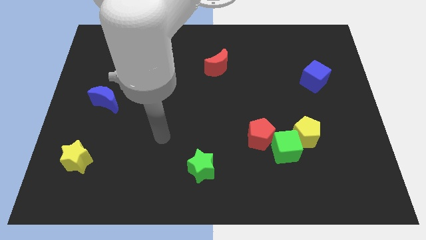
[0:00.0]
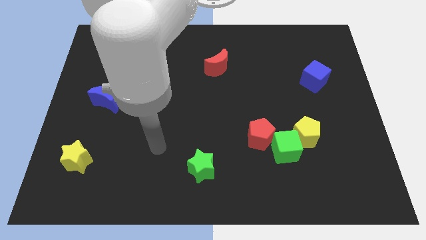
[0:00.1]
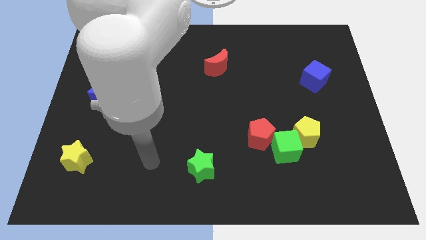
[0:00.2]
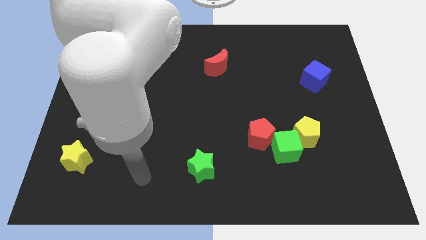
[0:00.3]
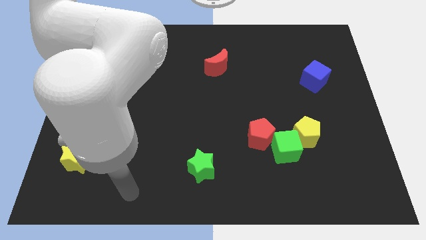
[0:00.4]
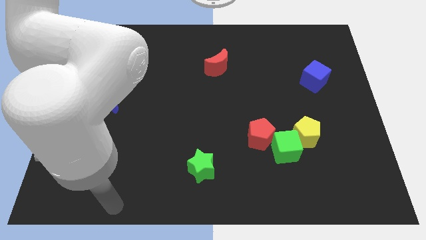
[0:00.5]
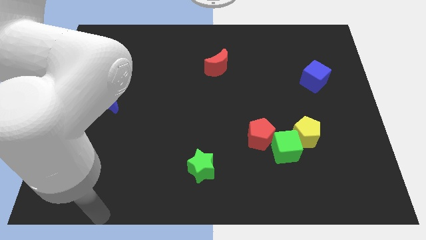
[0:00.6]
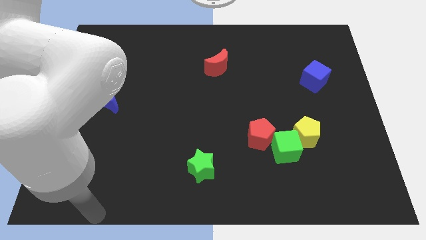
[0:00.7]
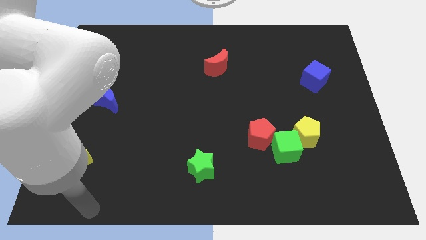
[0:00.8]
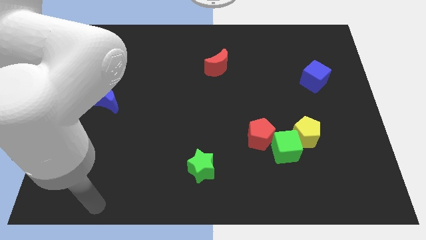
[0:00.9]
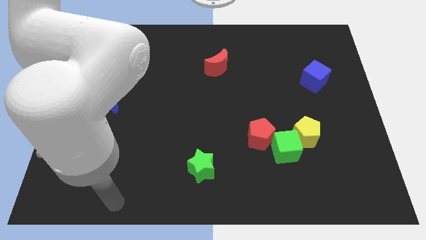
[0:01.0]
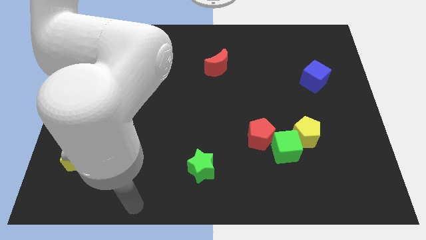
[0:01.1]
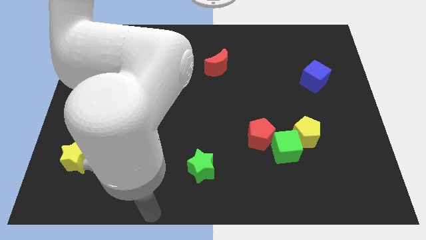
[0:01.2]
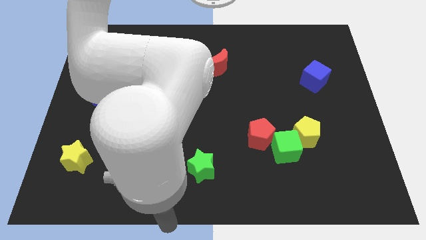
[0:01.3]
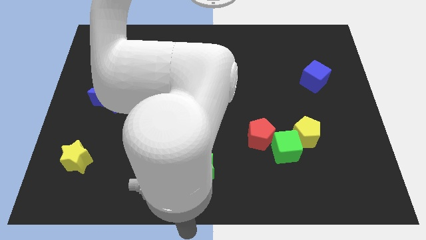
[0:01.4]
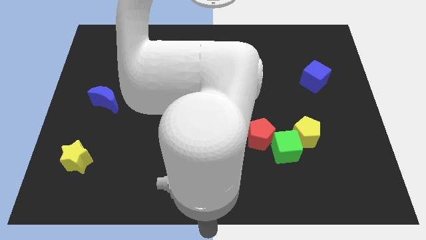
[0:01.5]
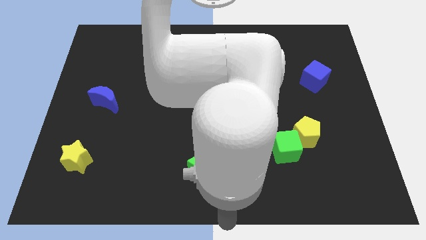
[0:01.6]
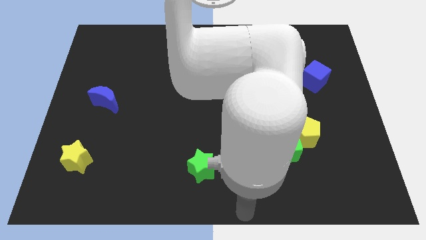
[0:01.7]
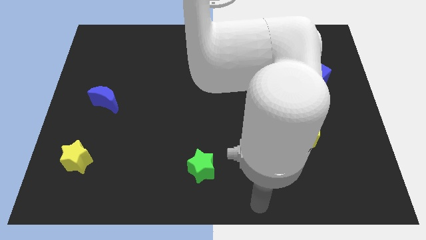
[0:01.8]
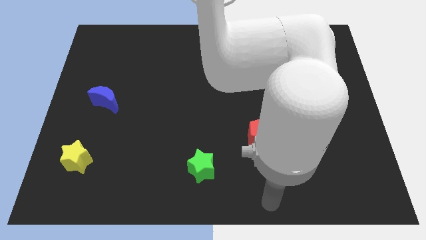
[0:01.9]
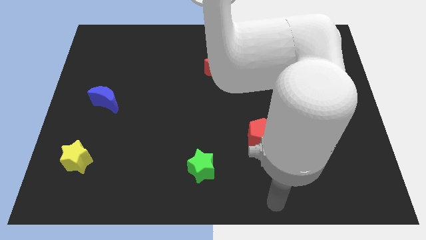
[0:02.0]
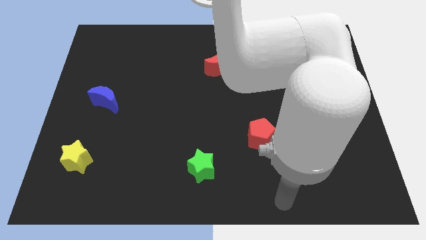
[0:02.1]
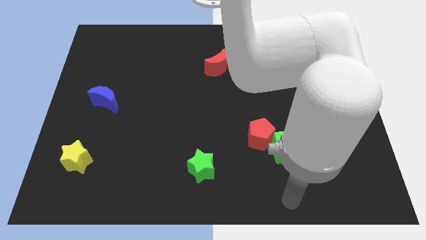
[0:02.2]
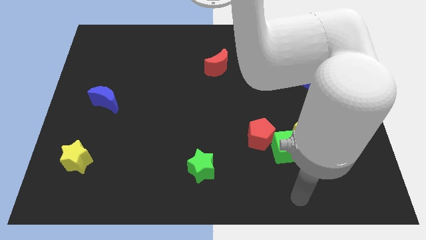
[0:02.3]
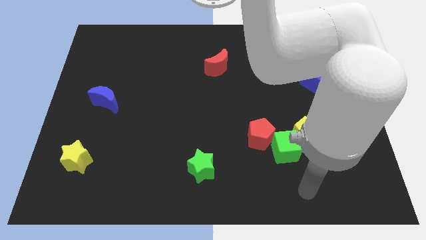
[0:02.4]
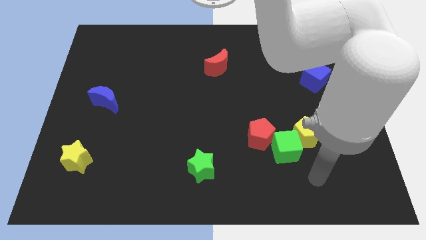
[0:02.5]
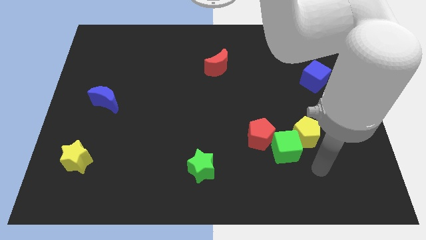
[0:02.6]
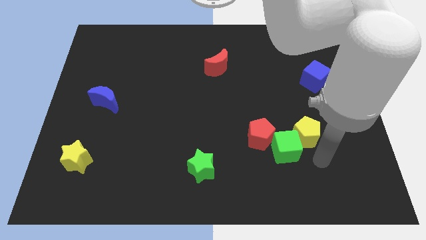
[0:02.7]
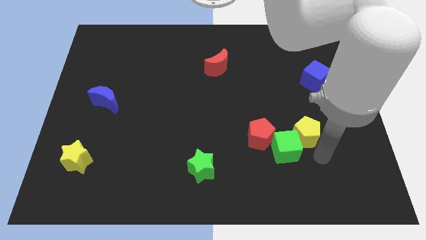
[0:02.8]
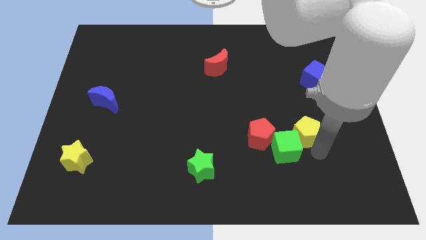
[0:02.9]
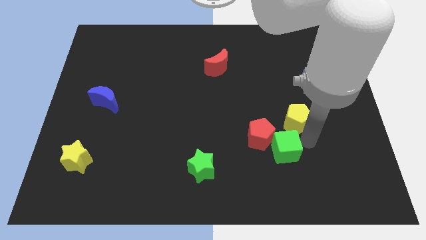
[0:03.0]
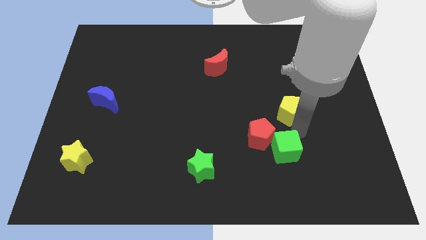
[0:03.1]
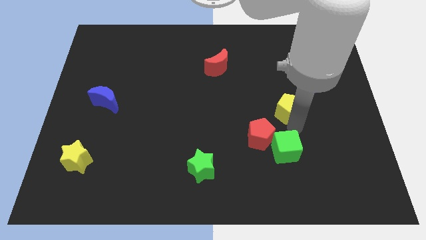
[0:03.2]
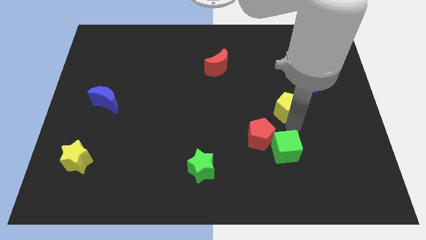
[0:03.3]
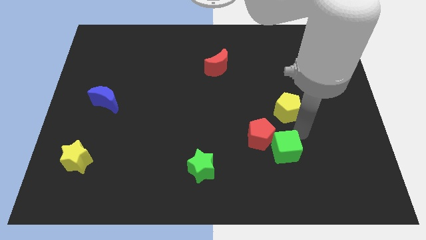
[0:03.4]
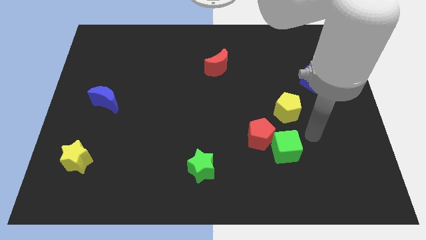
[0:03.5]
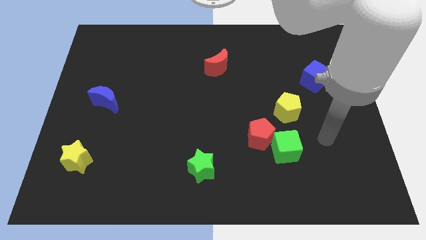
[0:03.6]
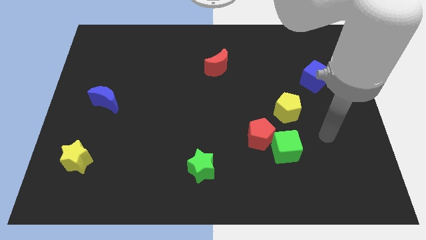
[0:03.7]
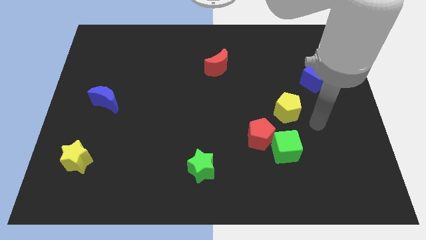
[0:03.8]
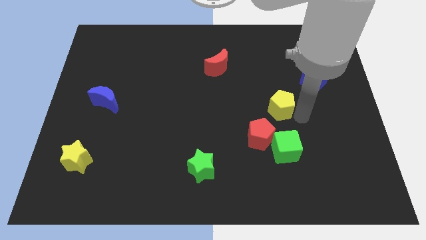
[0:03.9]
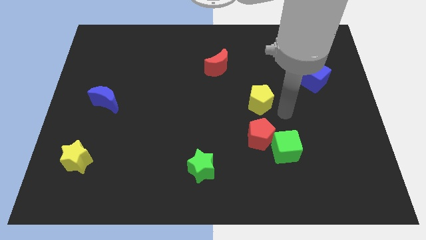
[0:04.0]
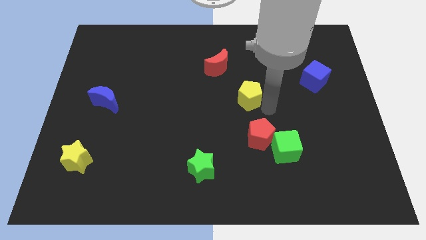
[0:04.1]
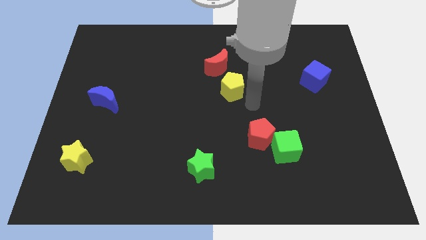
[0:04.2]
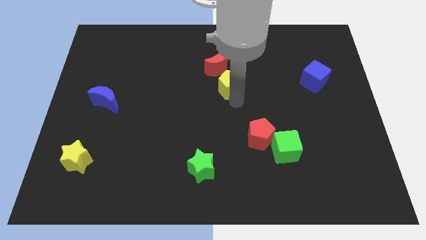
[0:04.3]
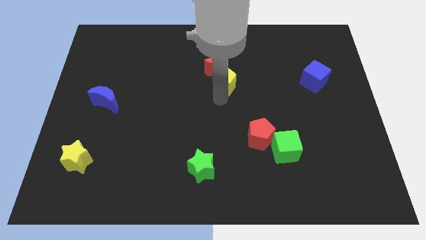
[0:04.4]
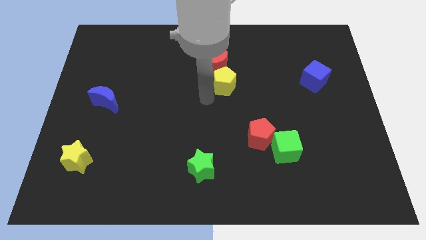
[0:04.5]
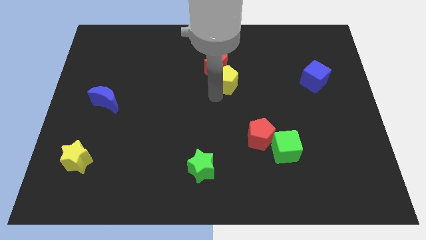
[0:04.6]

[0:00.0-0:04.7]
move the yellow pentagon towards the bottom of the red crescent

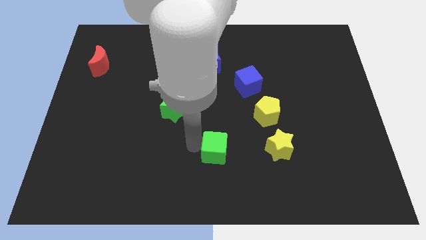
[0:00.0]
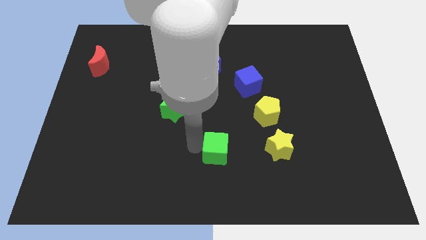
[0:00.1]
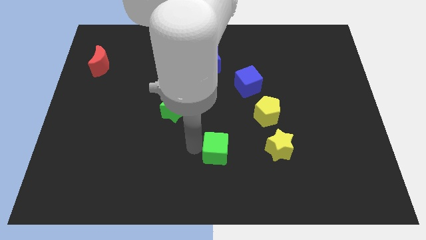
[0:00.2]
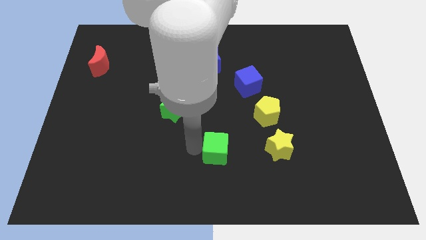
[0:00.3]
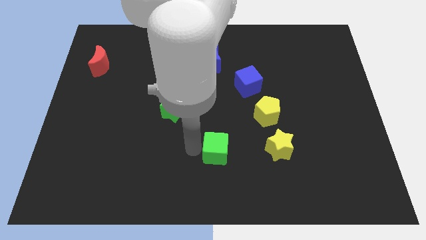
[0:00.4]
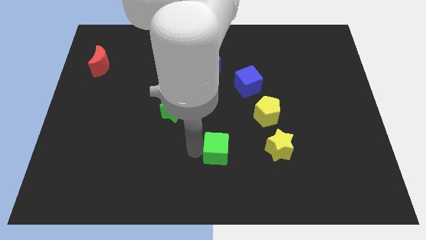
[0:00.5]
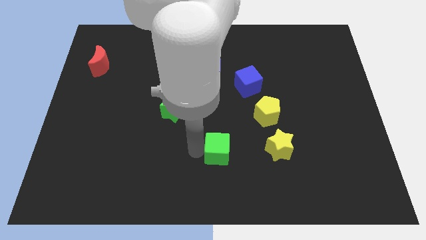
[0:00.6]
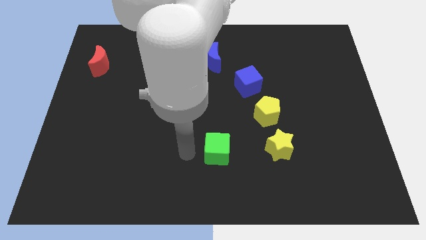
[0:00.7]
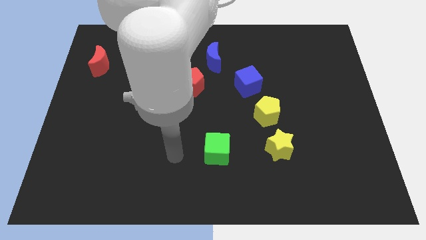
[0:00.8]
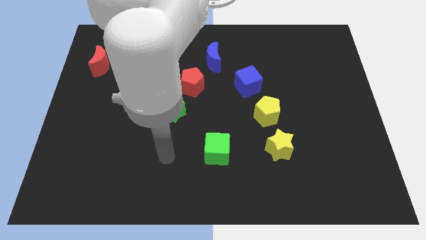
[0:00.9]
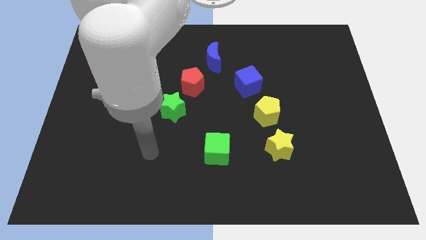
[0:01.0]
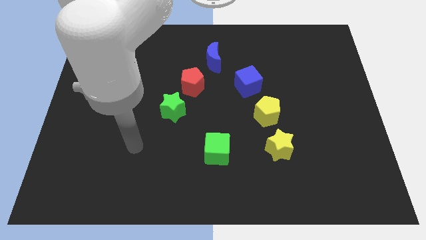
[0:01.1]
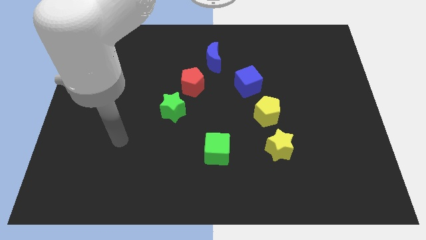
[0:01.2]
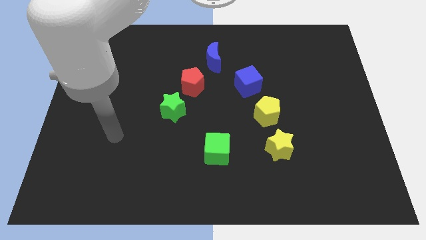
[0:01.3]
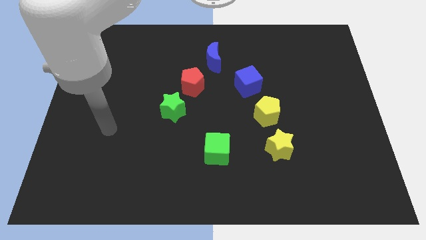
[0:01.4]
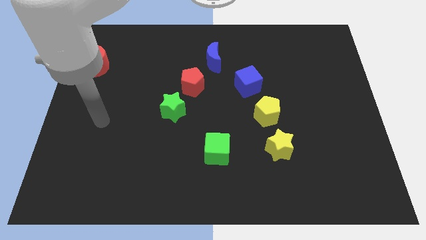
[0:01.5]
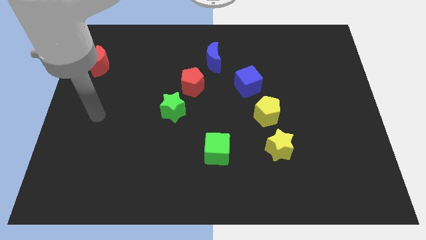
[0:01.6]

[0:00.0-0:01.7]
place the green cube below the blue moon

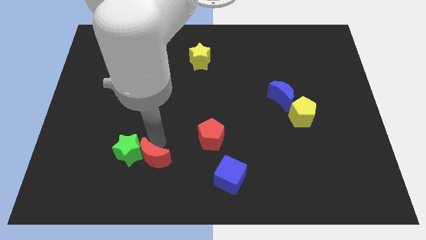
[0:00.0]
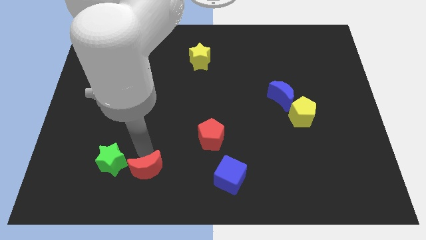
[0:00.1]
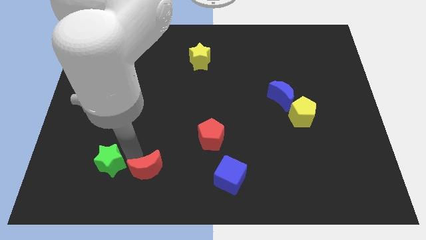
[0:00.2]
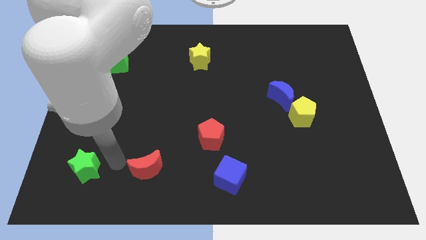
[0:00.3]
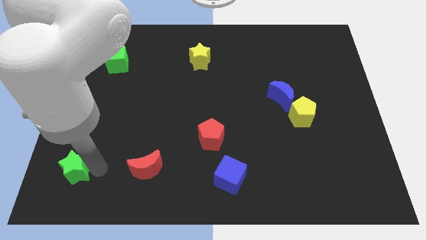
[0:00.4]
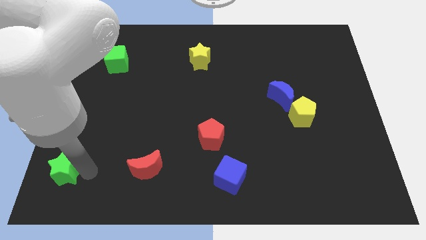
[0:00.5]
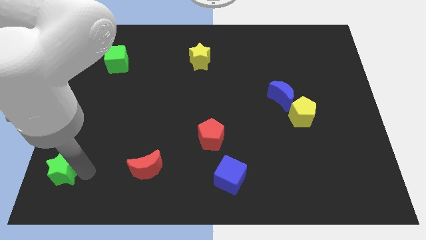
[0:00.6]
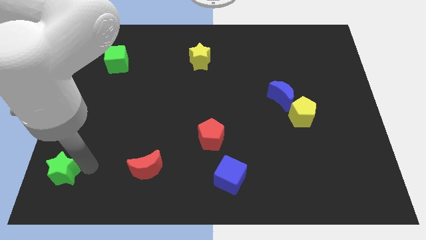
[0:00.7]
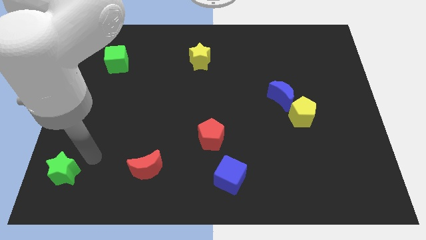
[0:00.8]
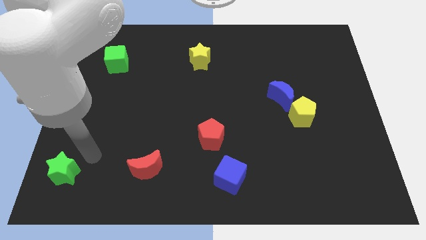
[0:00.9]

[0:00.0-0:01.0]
separate green star and red moon

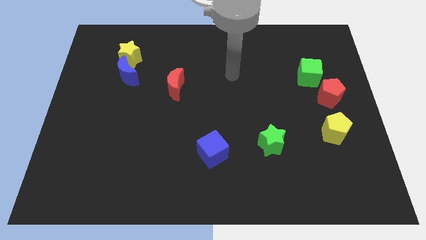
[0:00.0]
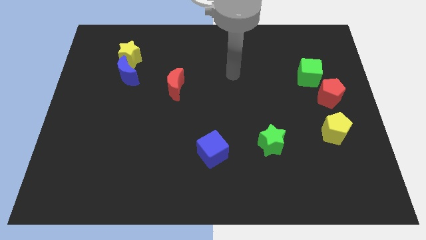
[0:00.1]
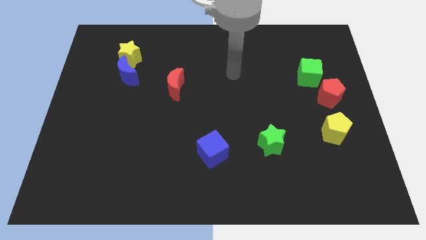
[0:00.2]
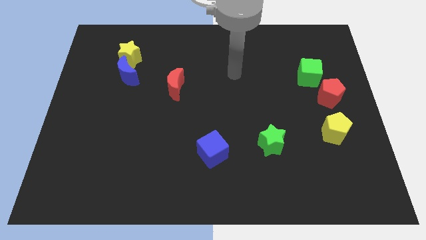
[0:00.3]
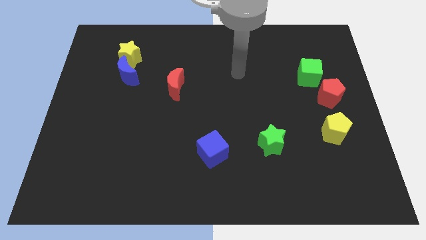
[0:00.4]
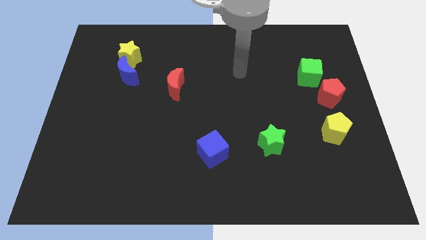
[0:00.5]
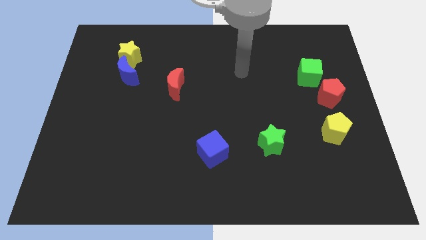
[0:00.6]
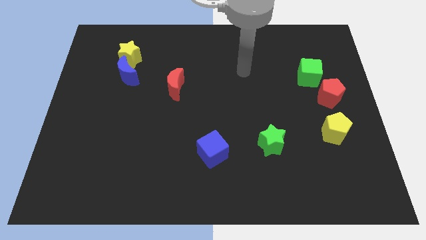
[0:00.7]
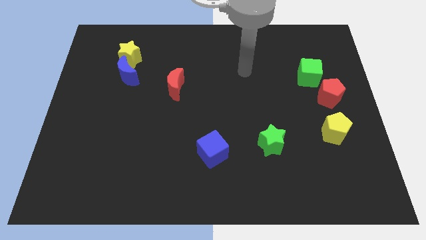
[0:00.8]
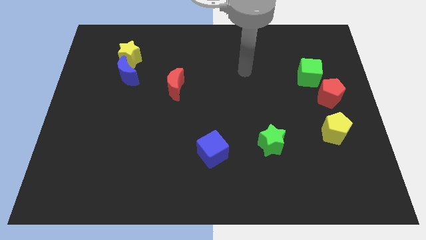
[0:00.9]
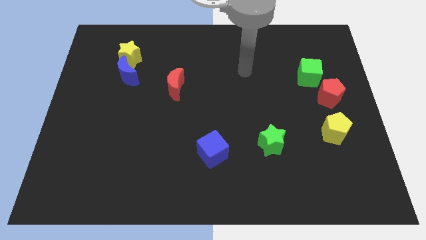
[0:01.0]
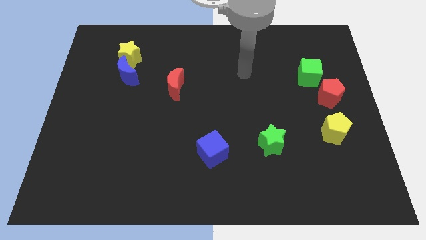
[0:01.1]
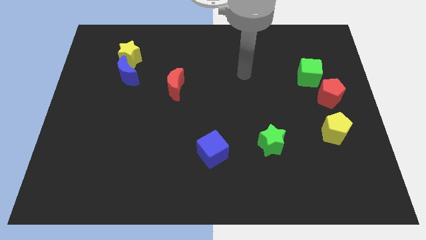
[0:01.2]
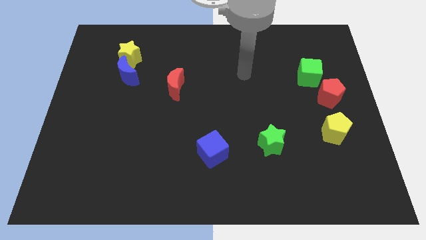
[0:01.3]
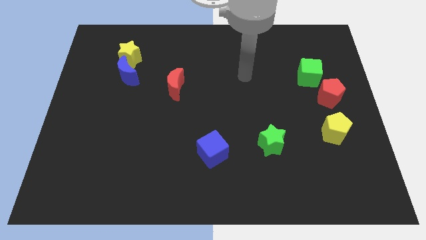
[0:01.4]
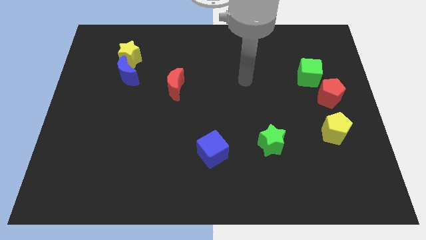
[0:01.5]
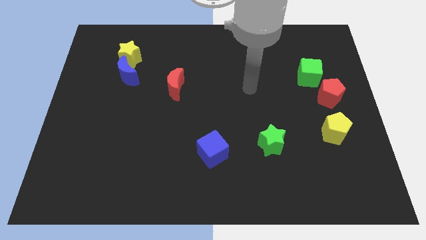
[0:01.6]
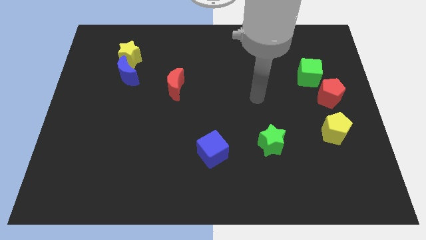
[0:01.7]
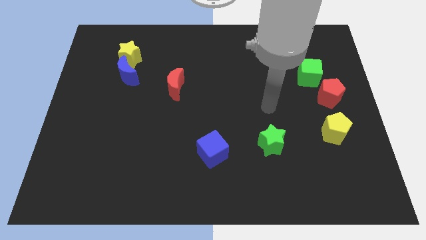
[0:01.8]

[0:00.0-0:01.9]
move your arm to the top of the green star
